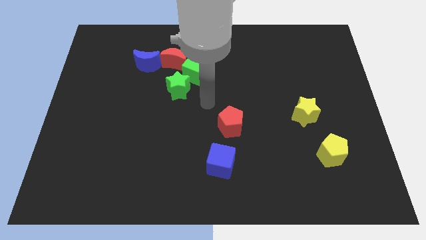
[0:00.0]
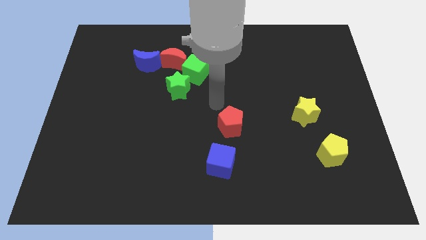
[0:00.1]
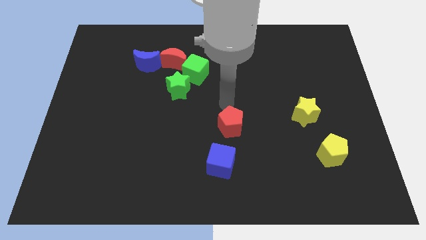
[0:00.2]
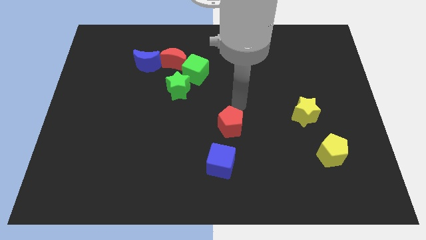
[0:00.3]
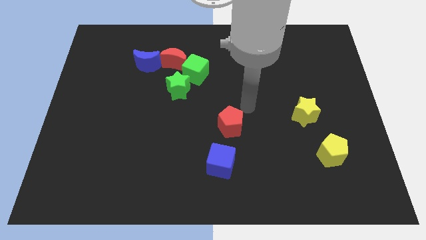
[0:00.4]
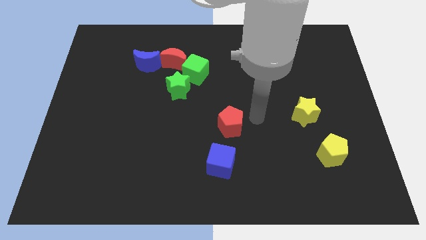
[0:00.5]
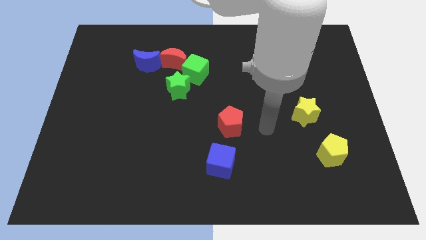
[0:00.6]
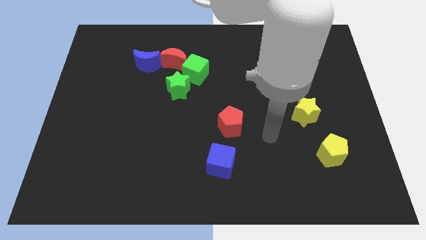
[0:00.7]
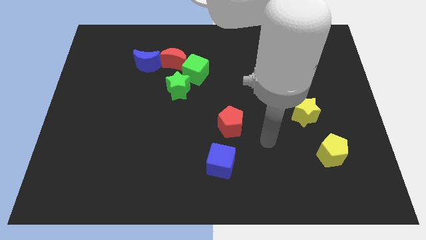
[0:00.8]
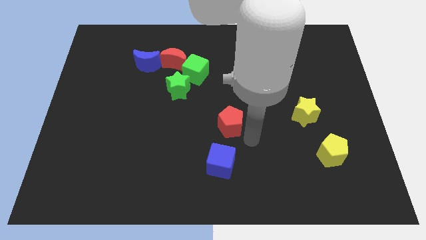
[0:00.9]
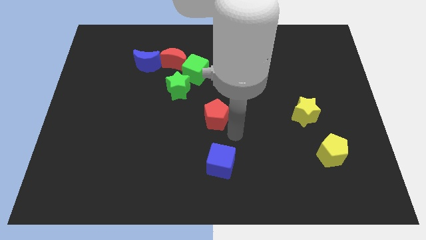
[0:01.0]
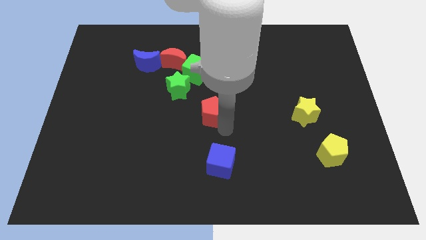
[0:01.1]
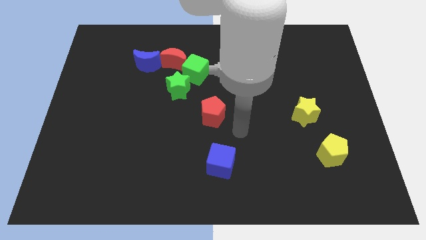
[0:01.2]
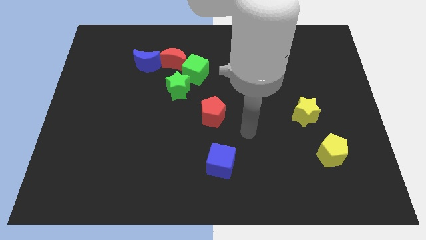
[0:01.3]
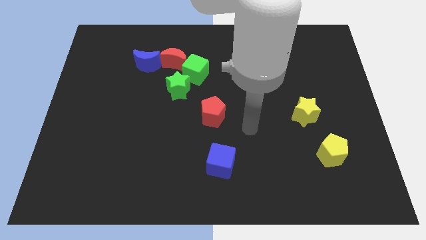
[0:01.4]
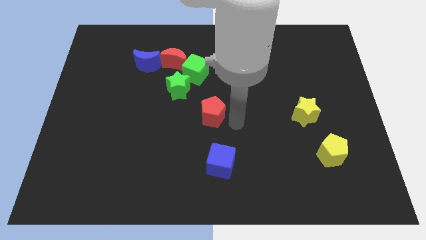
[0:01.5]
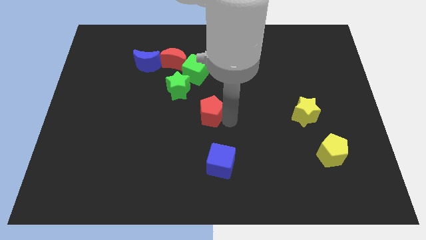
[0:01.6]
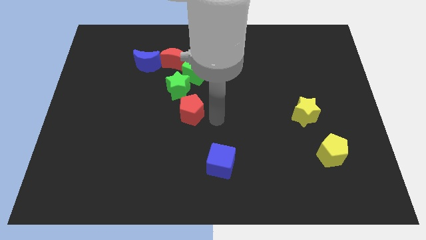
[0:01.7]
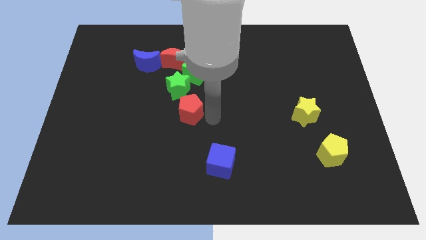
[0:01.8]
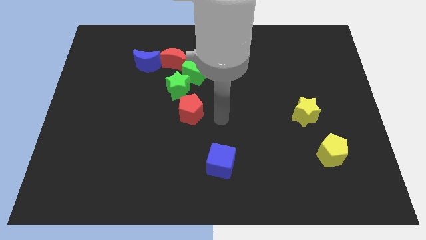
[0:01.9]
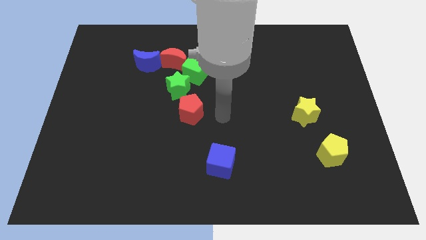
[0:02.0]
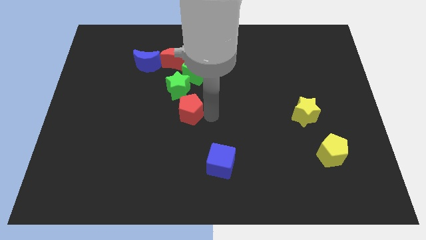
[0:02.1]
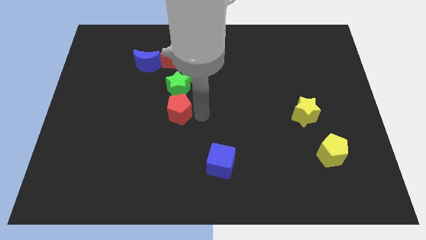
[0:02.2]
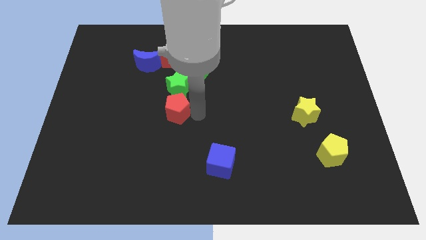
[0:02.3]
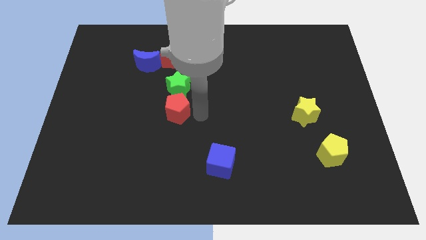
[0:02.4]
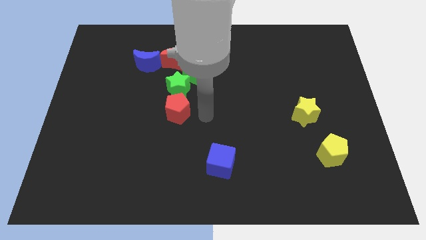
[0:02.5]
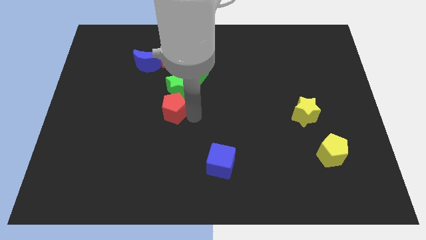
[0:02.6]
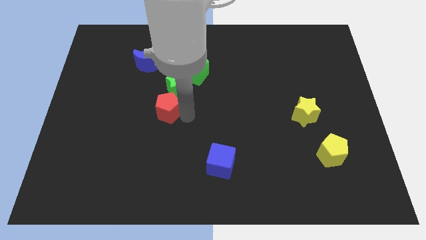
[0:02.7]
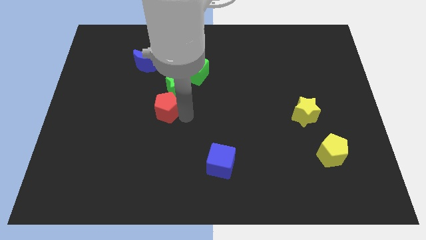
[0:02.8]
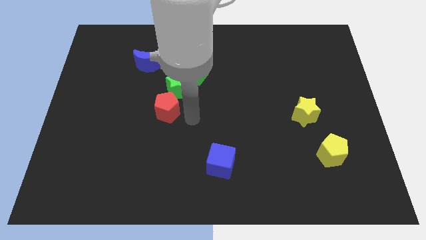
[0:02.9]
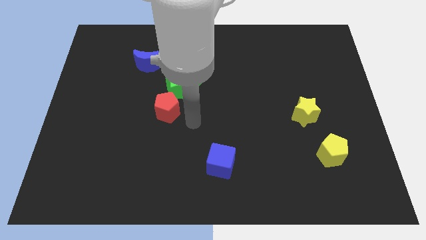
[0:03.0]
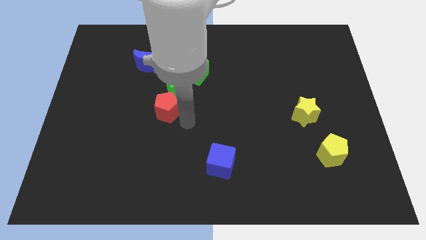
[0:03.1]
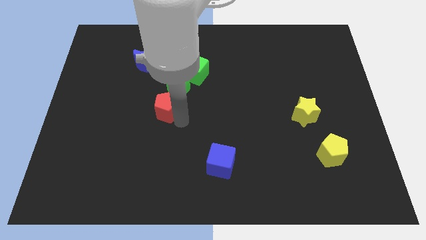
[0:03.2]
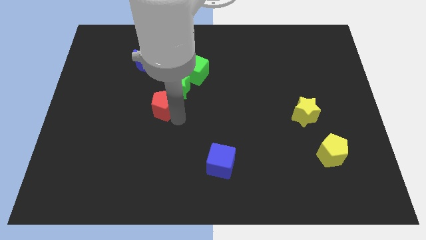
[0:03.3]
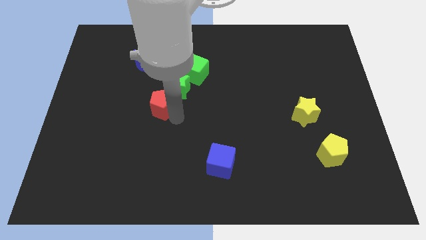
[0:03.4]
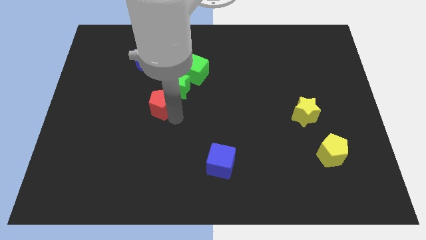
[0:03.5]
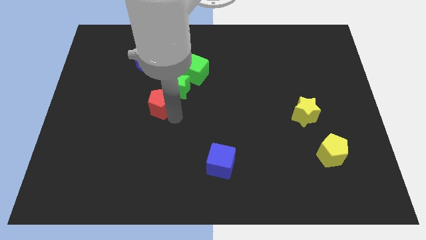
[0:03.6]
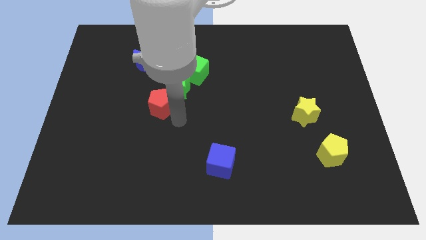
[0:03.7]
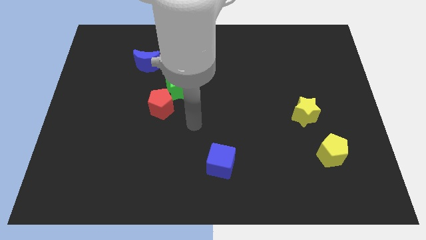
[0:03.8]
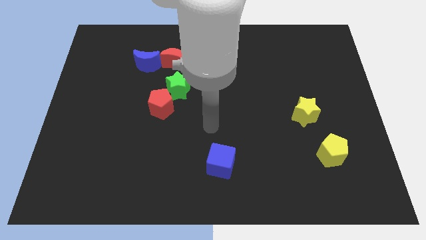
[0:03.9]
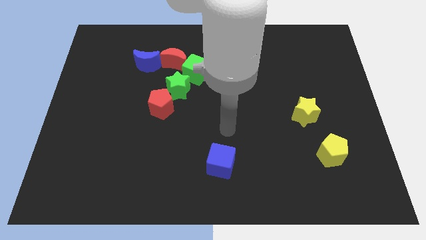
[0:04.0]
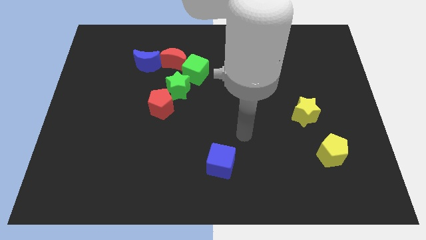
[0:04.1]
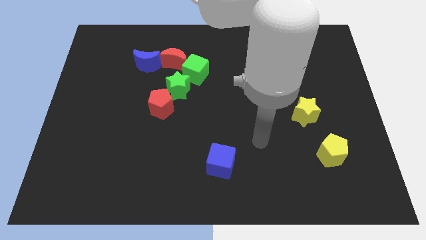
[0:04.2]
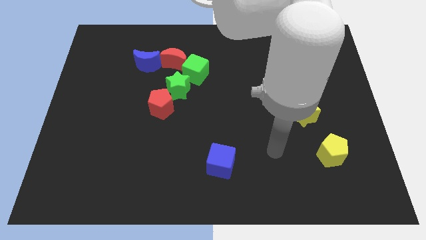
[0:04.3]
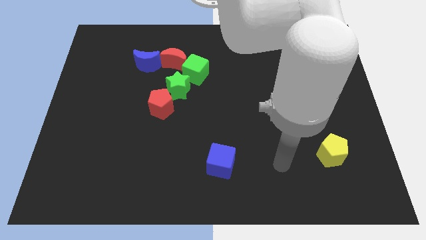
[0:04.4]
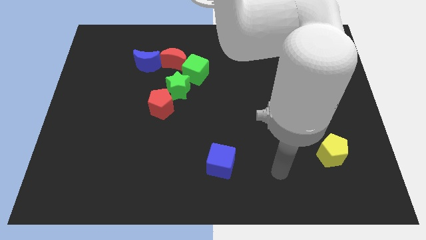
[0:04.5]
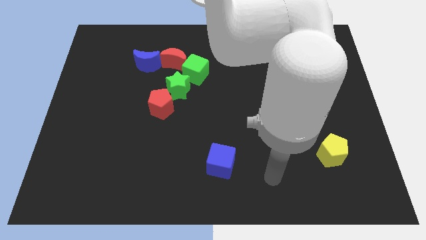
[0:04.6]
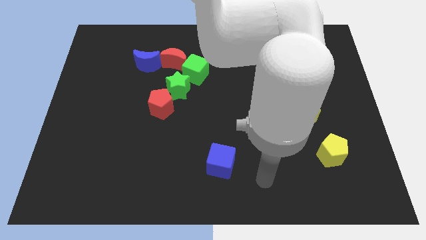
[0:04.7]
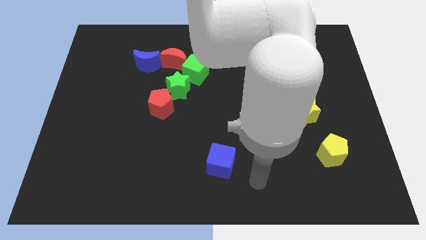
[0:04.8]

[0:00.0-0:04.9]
place the red pentagon below the green star

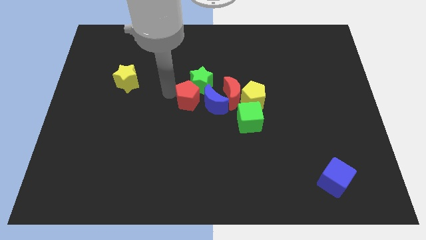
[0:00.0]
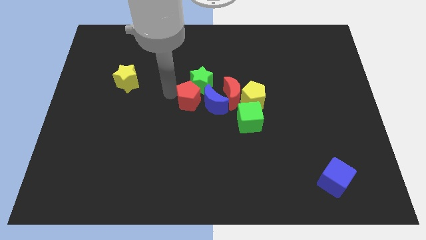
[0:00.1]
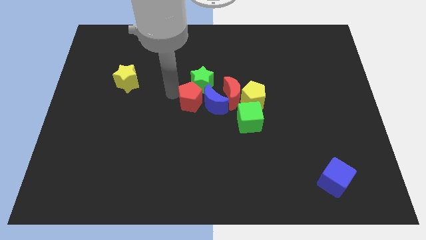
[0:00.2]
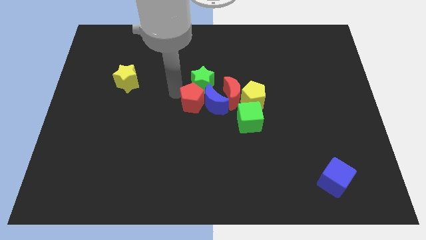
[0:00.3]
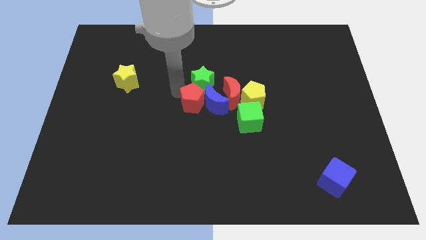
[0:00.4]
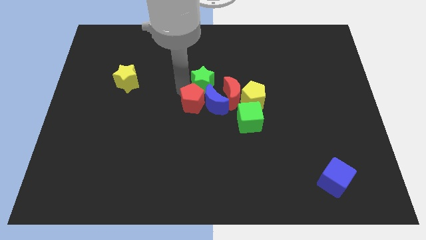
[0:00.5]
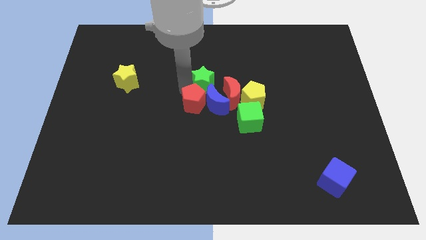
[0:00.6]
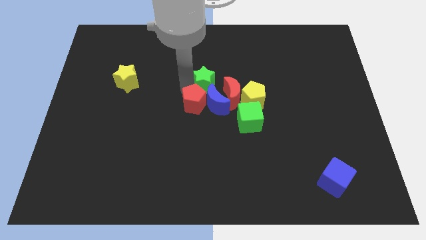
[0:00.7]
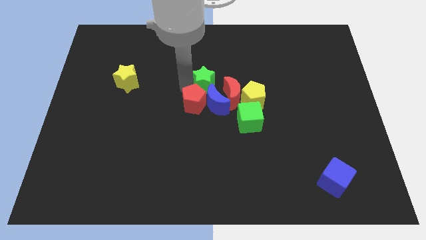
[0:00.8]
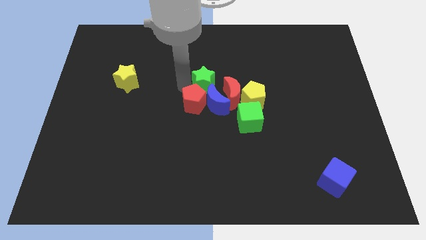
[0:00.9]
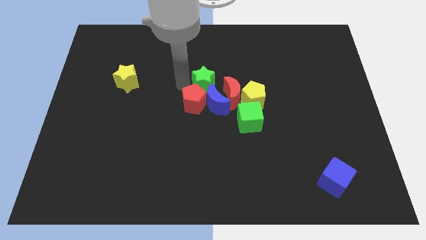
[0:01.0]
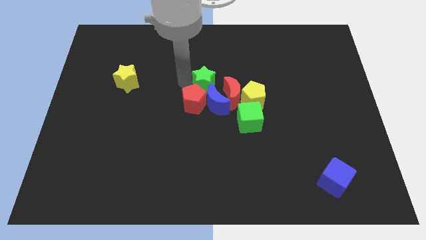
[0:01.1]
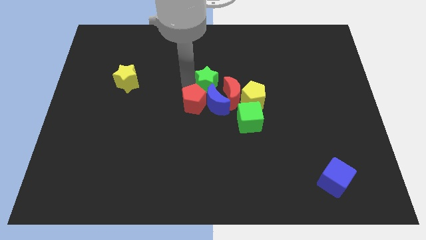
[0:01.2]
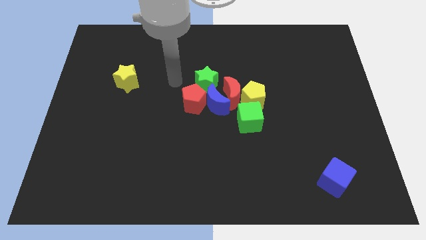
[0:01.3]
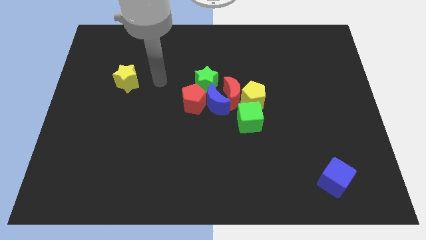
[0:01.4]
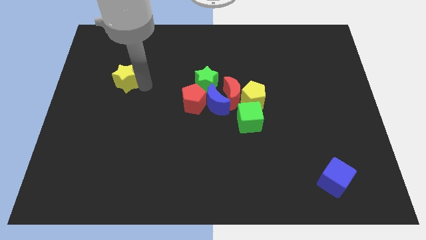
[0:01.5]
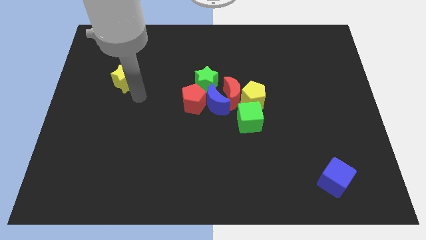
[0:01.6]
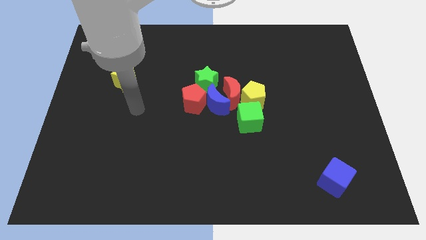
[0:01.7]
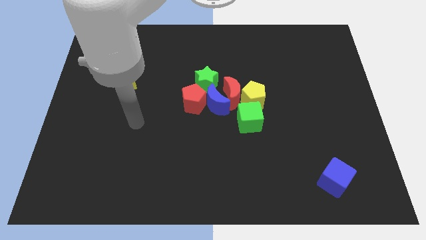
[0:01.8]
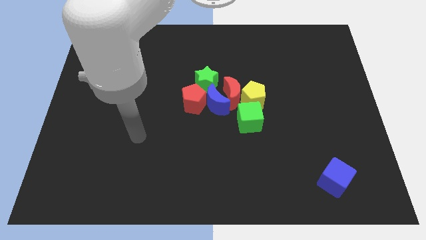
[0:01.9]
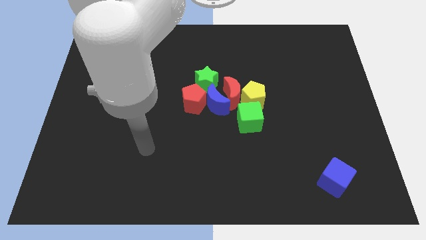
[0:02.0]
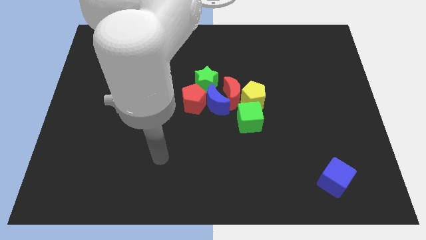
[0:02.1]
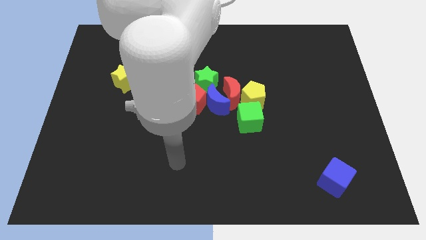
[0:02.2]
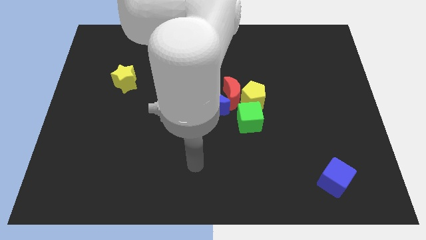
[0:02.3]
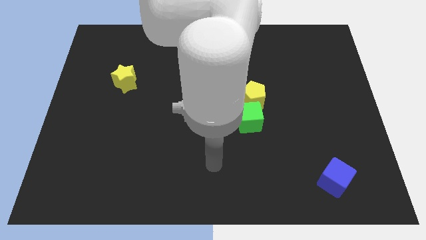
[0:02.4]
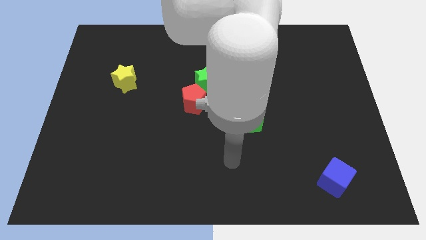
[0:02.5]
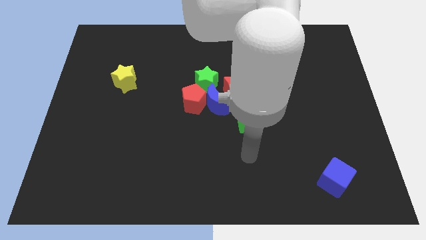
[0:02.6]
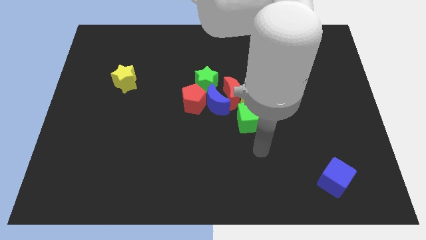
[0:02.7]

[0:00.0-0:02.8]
slightly touch the green star along with the red pentagon

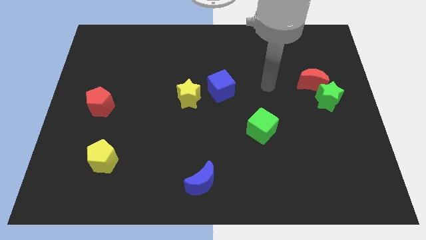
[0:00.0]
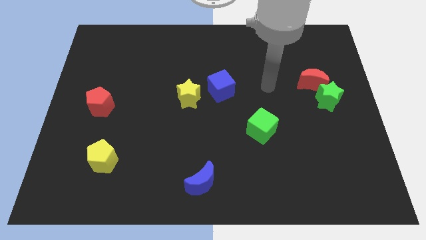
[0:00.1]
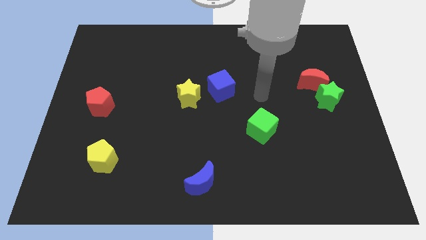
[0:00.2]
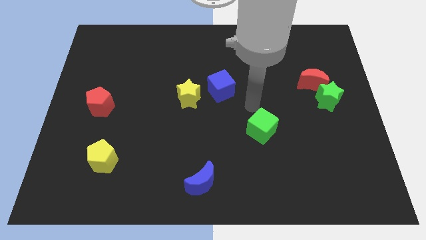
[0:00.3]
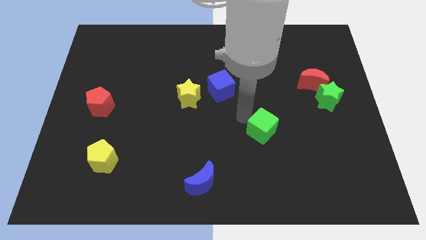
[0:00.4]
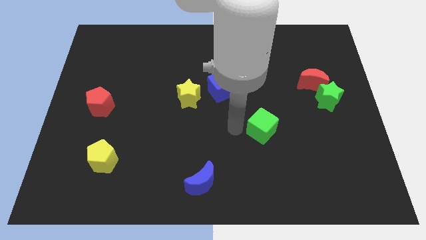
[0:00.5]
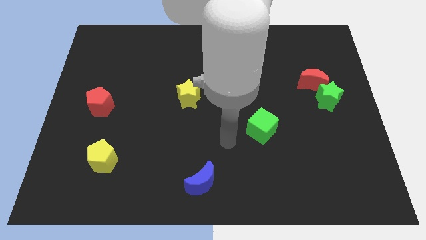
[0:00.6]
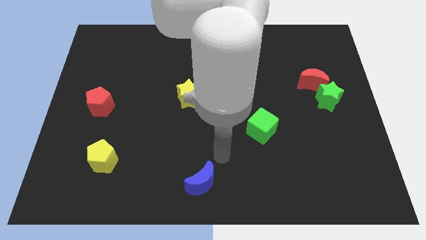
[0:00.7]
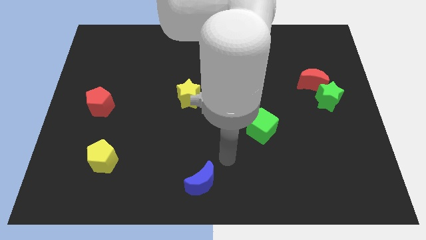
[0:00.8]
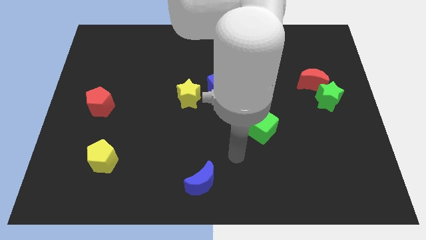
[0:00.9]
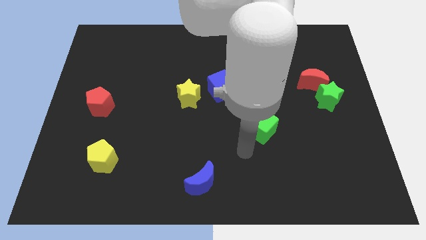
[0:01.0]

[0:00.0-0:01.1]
move your arm towards bottom of green cube

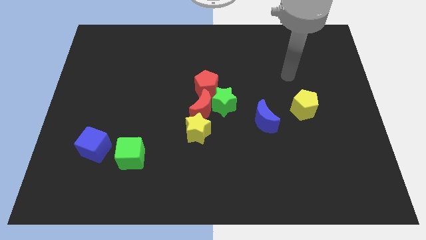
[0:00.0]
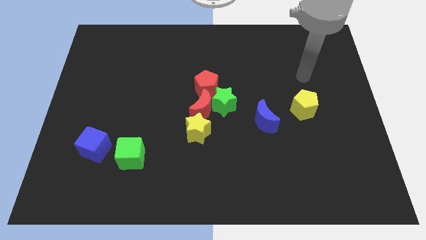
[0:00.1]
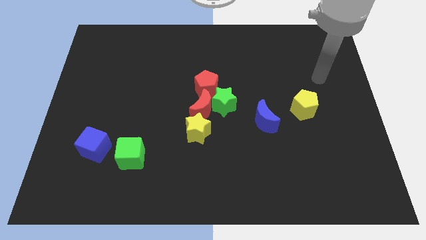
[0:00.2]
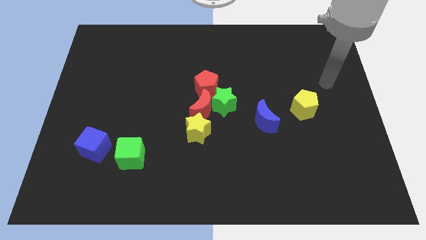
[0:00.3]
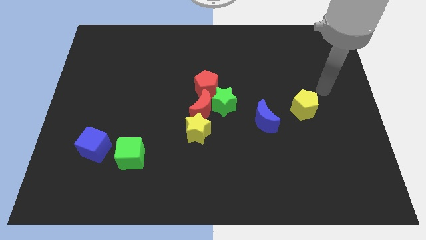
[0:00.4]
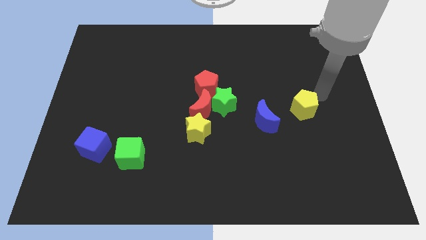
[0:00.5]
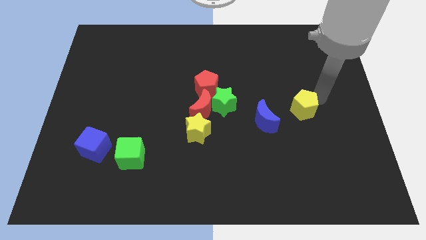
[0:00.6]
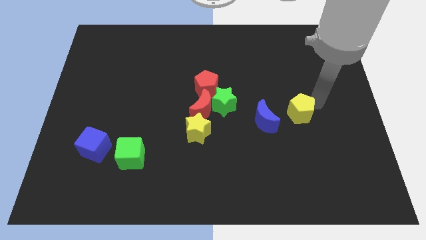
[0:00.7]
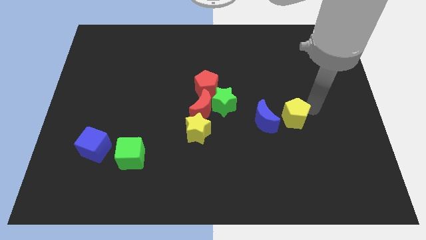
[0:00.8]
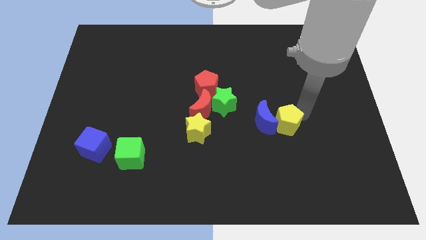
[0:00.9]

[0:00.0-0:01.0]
push the yellow pentagon into the blue crescent
